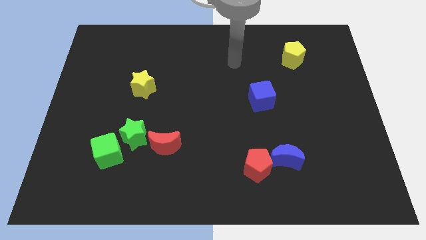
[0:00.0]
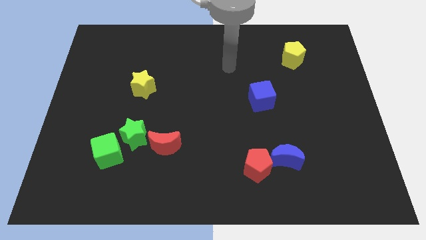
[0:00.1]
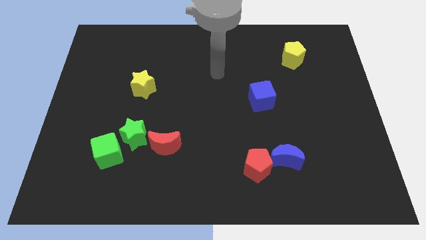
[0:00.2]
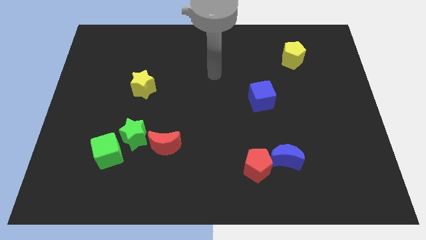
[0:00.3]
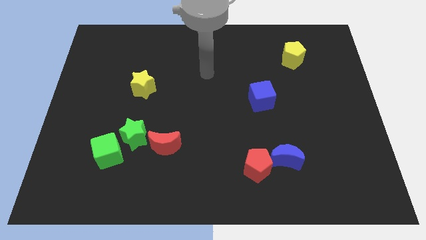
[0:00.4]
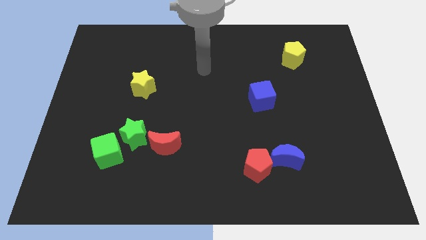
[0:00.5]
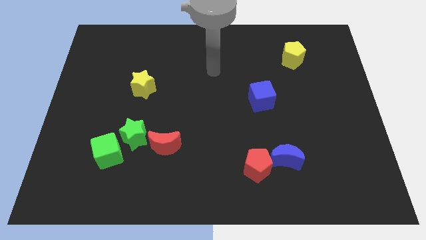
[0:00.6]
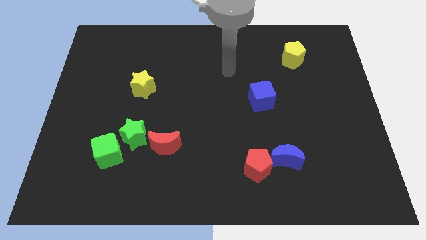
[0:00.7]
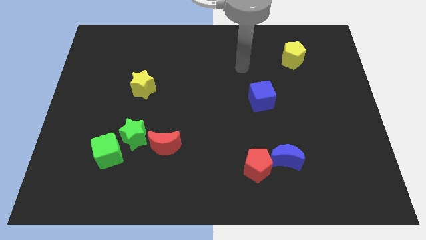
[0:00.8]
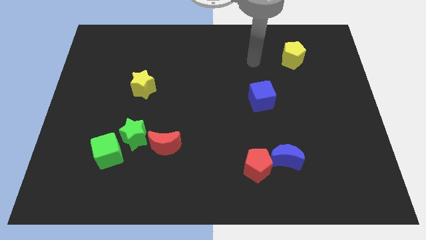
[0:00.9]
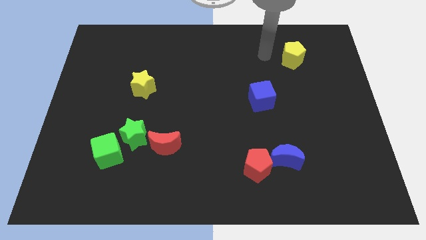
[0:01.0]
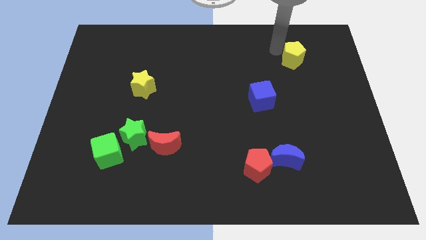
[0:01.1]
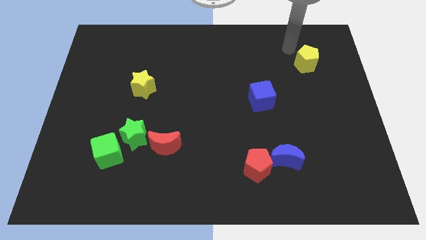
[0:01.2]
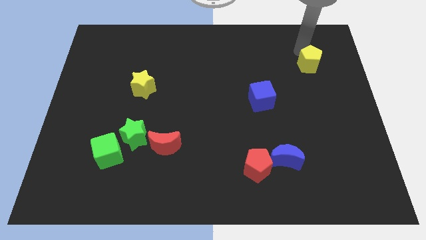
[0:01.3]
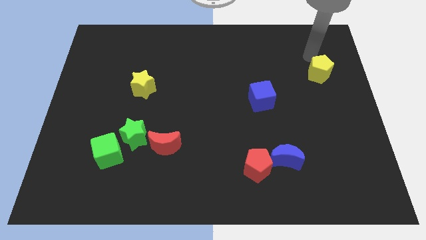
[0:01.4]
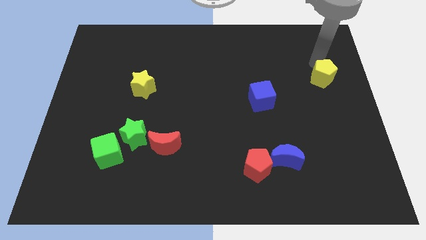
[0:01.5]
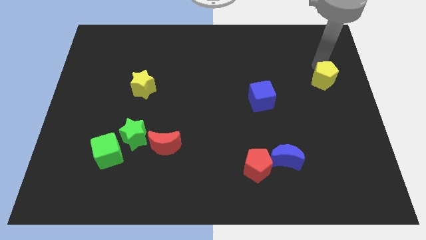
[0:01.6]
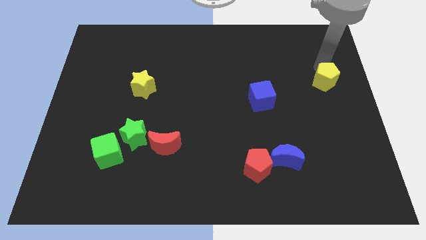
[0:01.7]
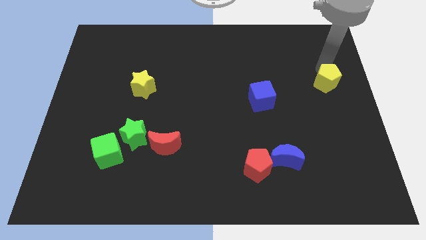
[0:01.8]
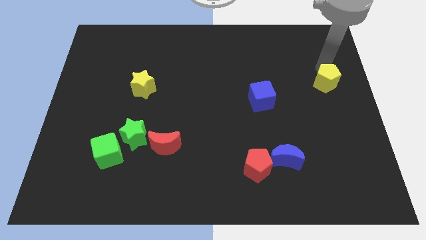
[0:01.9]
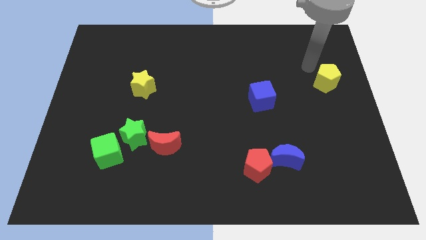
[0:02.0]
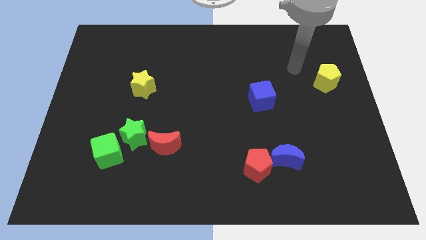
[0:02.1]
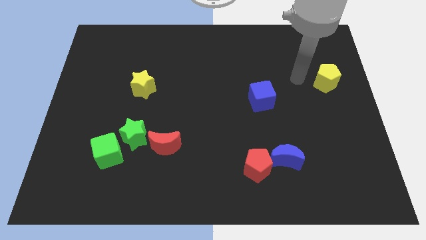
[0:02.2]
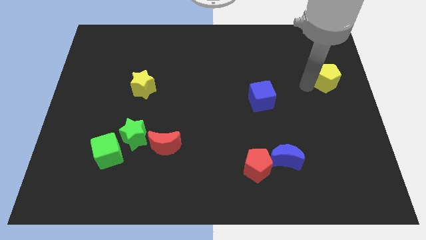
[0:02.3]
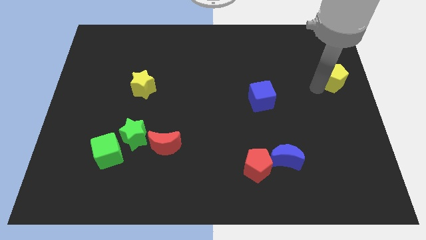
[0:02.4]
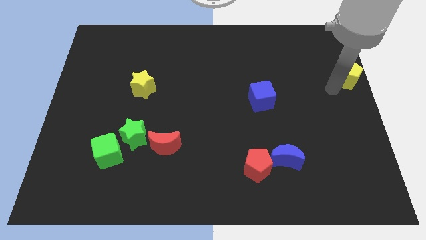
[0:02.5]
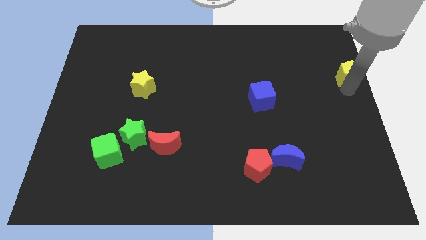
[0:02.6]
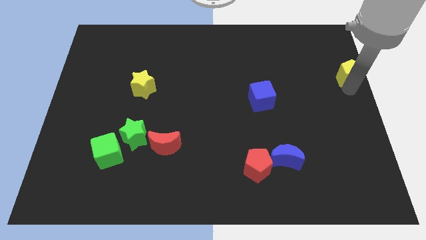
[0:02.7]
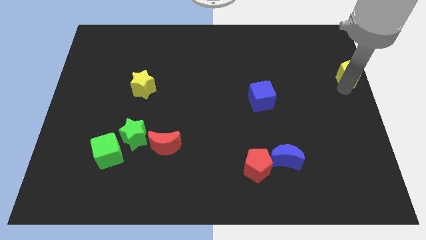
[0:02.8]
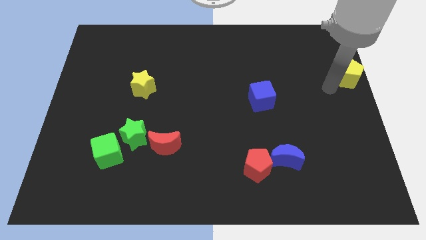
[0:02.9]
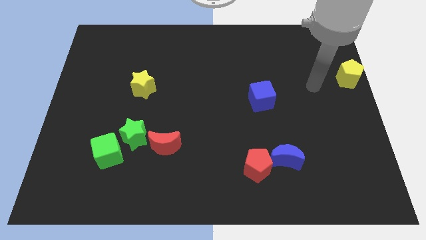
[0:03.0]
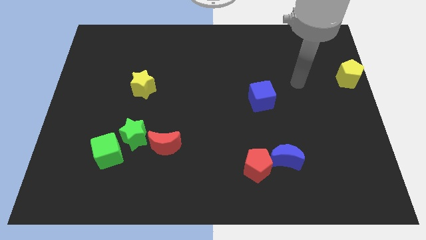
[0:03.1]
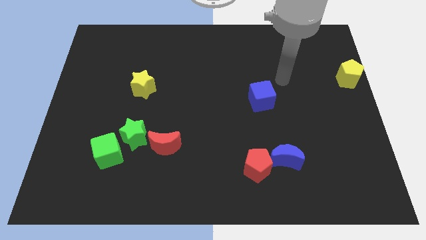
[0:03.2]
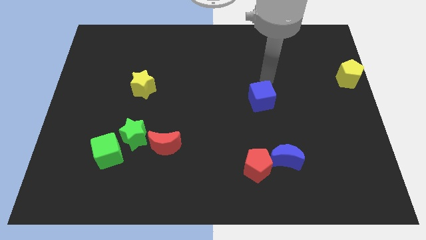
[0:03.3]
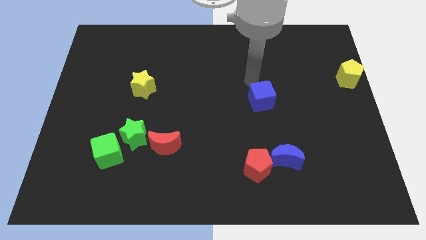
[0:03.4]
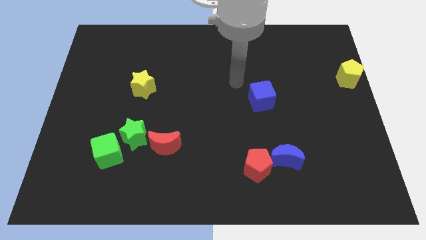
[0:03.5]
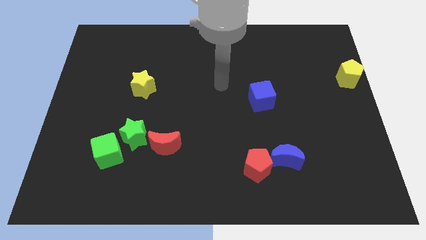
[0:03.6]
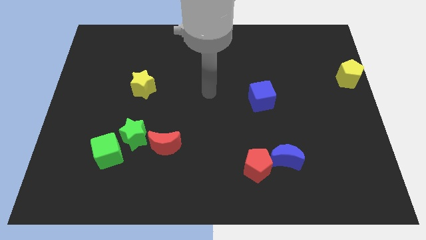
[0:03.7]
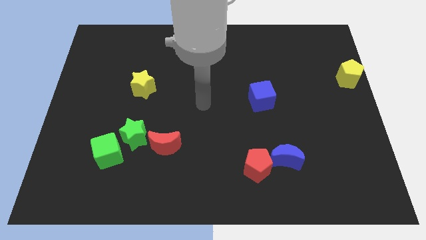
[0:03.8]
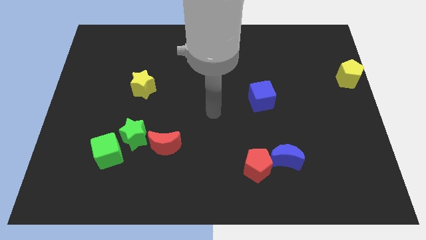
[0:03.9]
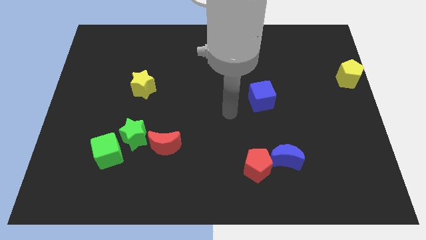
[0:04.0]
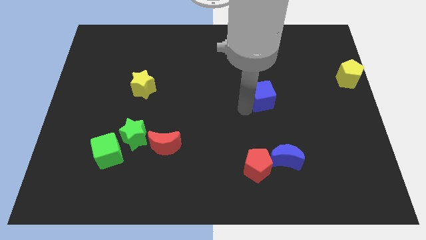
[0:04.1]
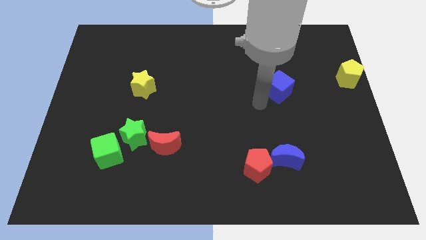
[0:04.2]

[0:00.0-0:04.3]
slide the yellow pentagon to the right of blue cube

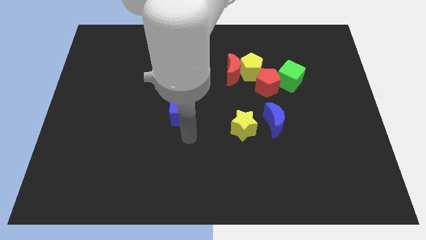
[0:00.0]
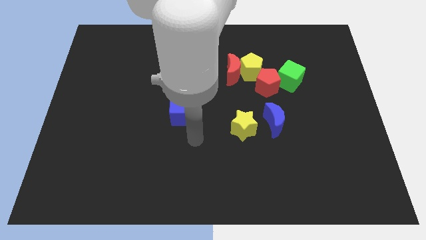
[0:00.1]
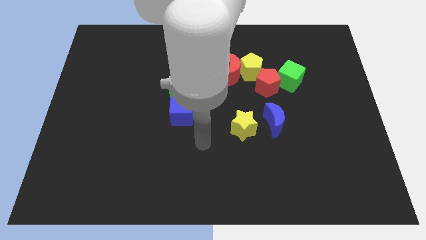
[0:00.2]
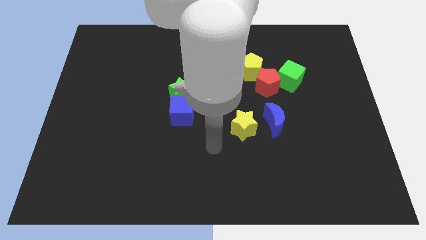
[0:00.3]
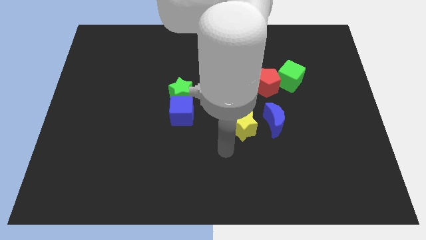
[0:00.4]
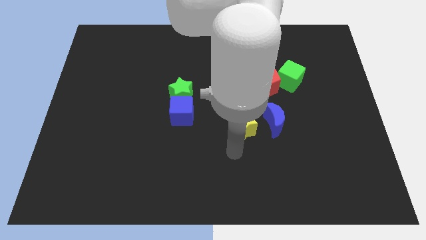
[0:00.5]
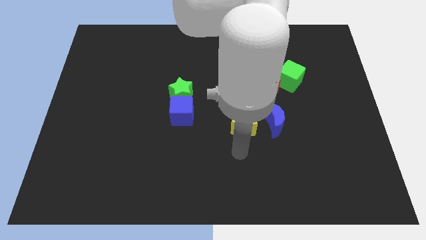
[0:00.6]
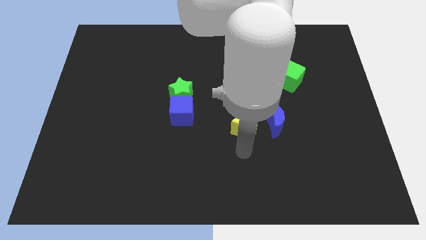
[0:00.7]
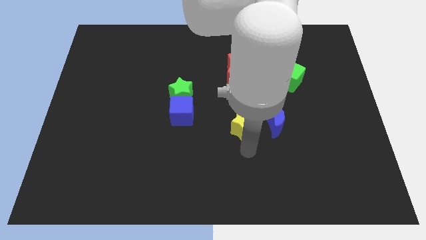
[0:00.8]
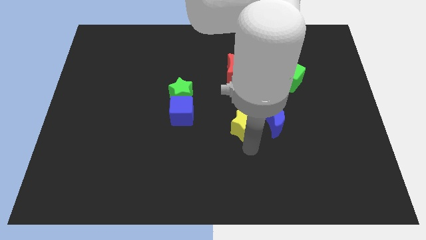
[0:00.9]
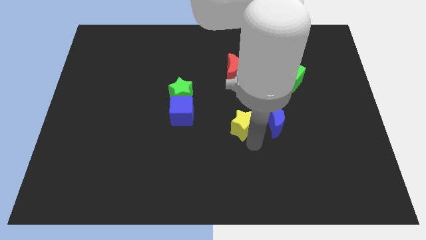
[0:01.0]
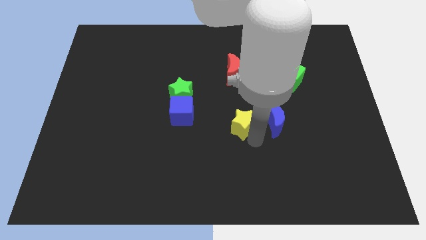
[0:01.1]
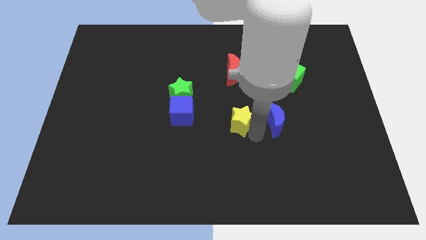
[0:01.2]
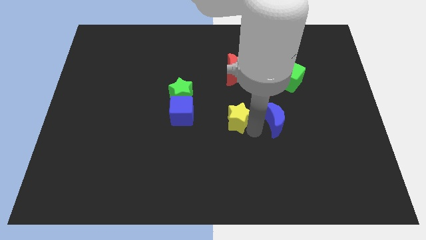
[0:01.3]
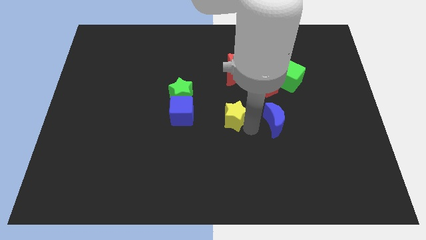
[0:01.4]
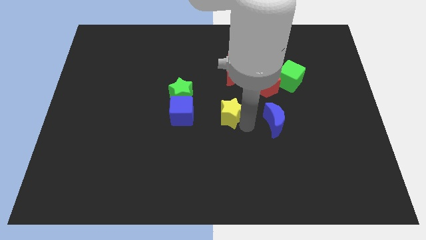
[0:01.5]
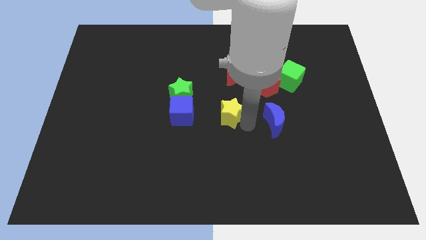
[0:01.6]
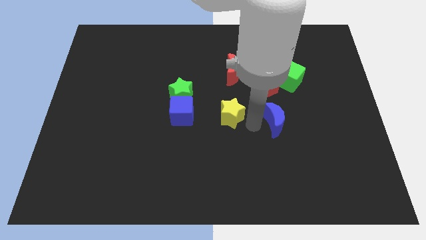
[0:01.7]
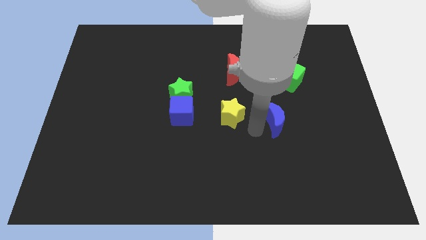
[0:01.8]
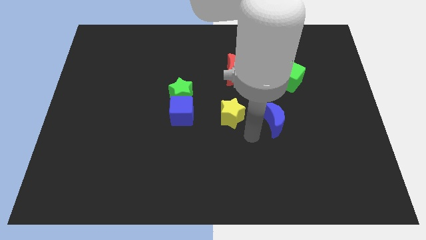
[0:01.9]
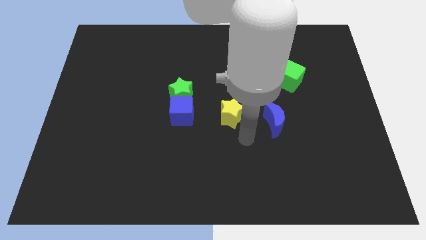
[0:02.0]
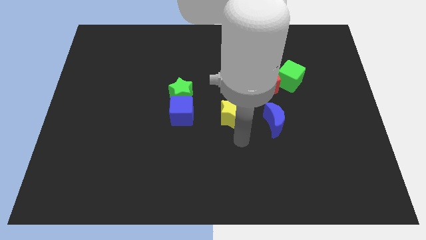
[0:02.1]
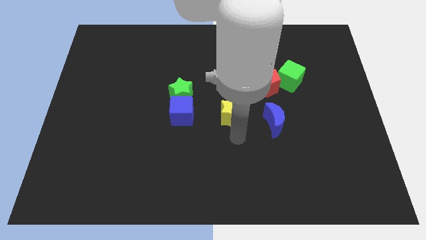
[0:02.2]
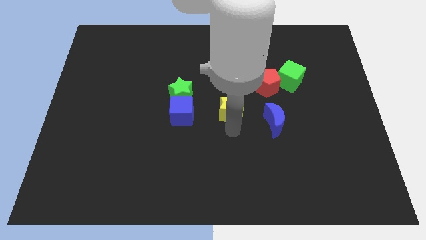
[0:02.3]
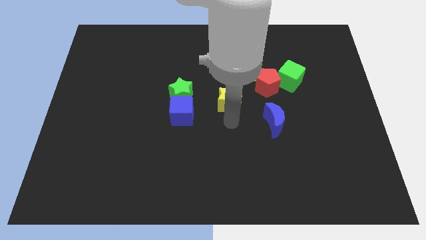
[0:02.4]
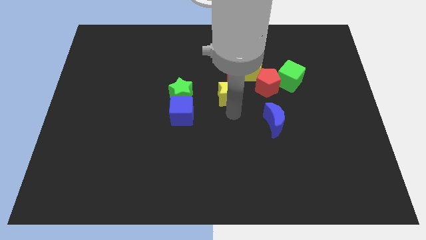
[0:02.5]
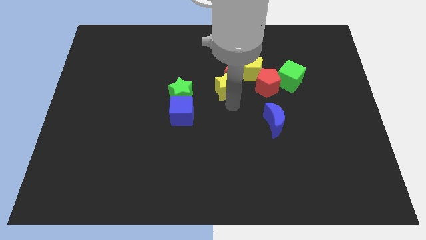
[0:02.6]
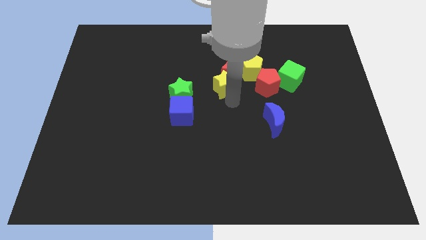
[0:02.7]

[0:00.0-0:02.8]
move the yellow star parallel to the right of the green star

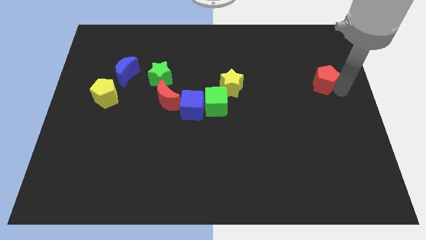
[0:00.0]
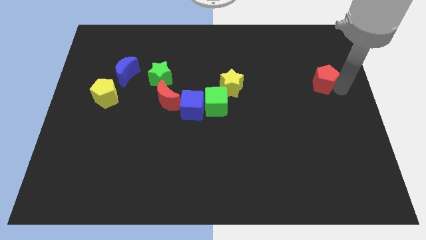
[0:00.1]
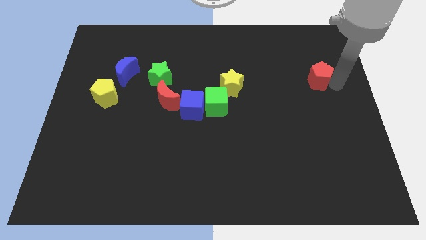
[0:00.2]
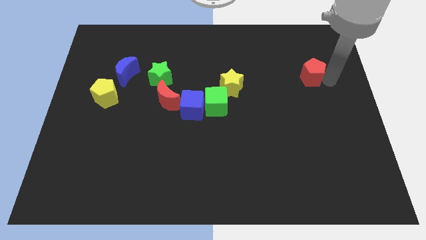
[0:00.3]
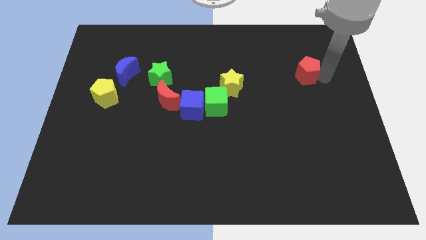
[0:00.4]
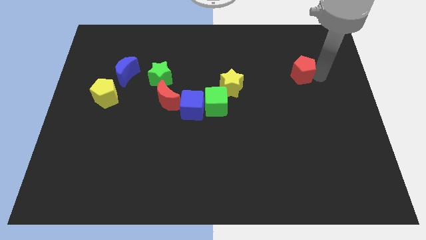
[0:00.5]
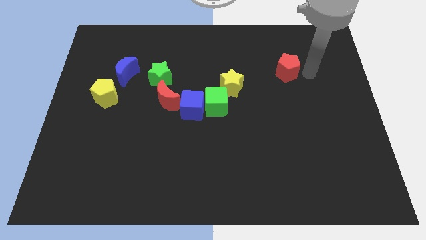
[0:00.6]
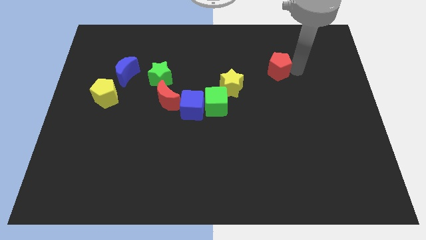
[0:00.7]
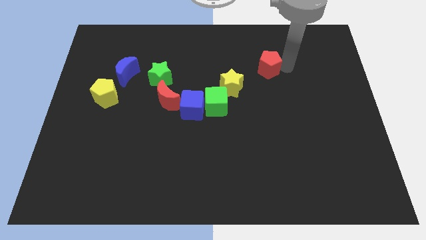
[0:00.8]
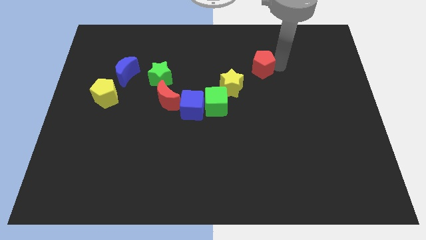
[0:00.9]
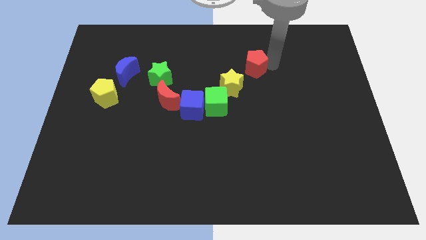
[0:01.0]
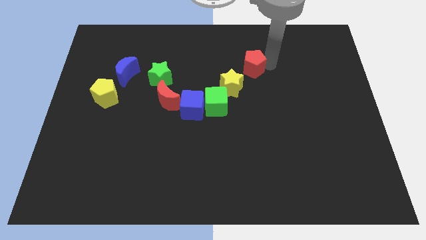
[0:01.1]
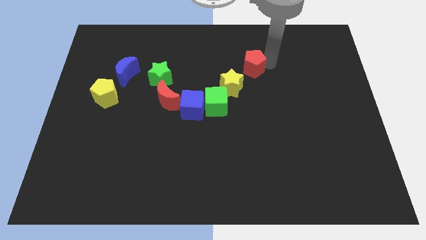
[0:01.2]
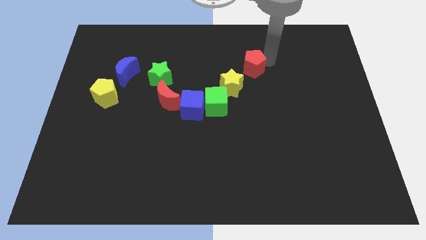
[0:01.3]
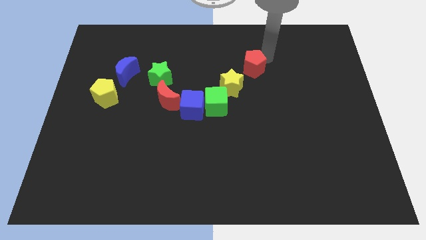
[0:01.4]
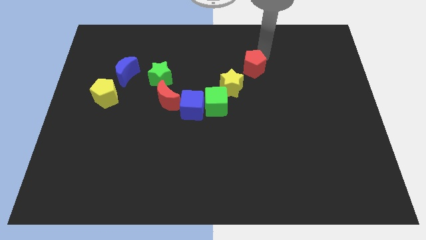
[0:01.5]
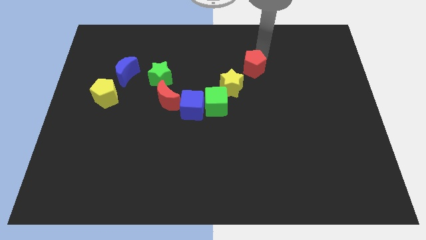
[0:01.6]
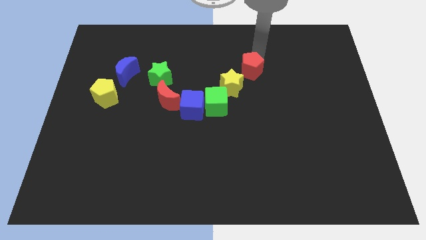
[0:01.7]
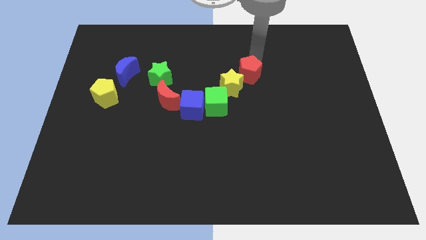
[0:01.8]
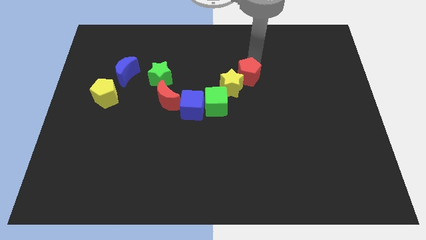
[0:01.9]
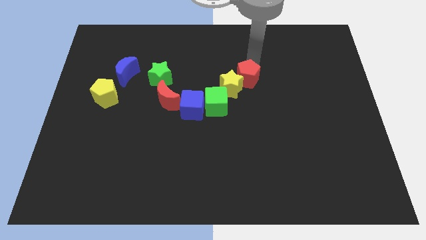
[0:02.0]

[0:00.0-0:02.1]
push the red pentagon to the top right side of the yellow pentagon
